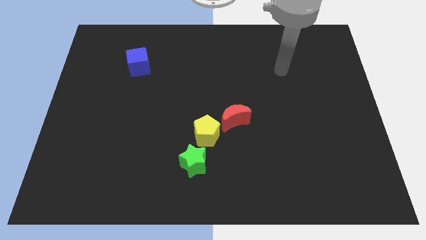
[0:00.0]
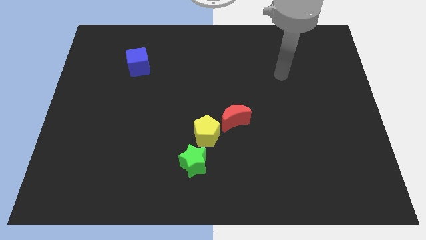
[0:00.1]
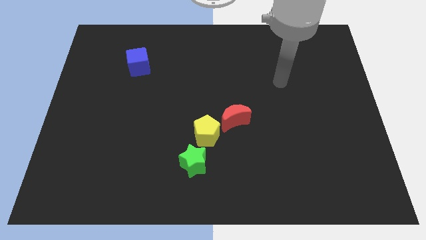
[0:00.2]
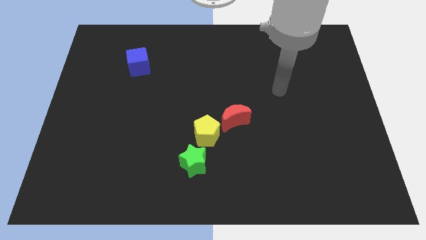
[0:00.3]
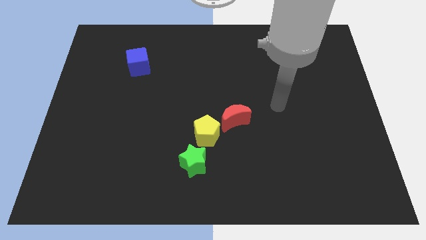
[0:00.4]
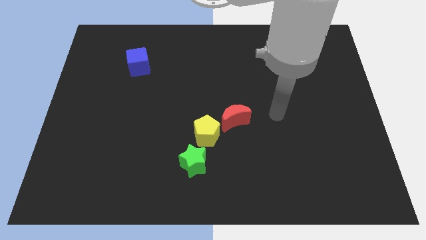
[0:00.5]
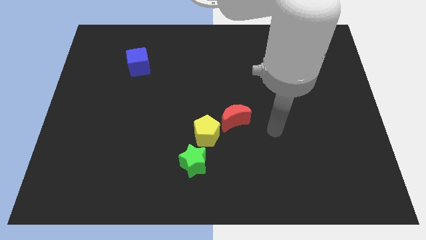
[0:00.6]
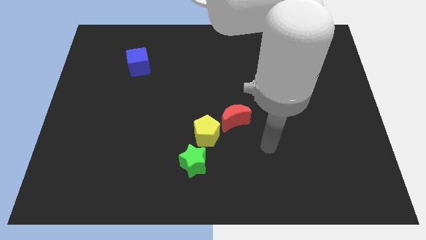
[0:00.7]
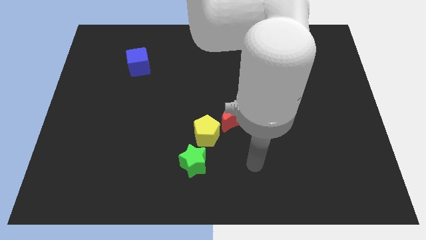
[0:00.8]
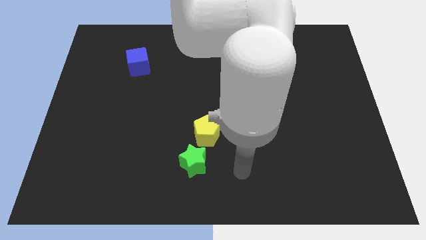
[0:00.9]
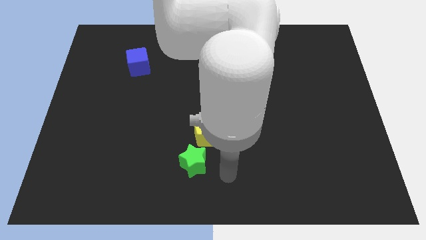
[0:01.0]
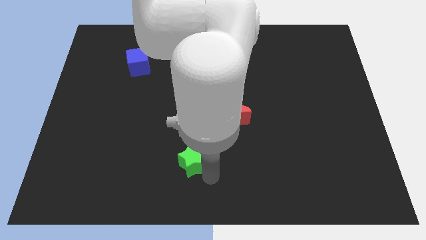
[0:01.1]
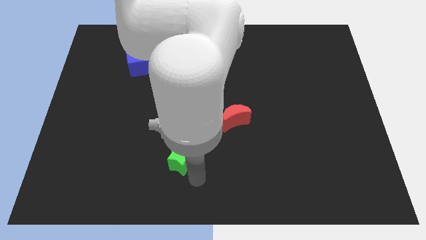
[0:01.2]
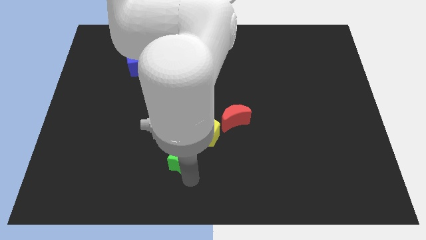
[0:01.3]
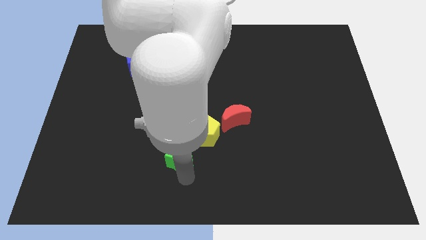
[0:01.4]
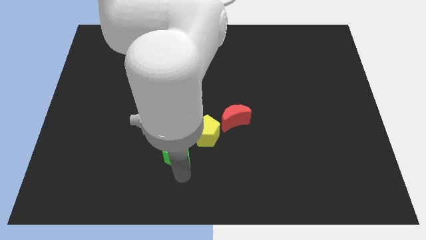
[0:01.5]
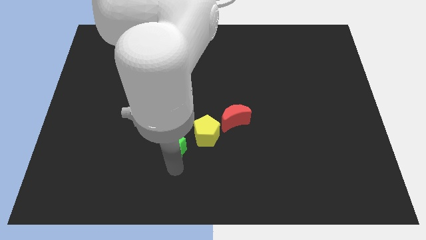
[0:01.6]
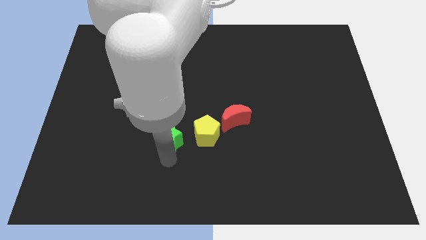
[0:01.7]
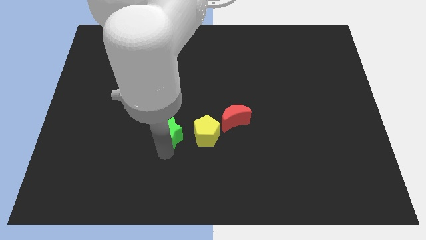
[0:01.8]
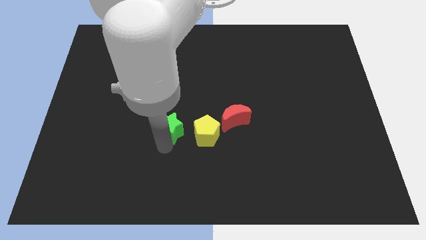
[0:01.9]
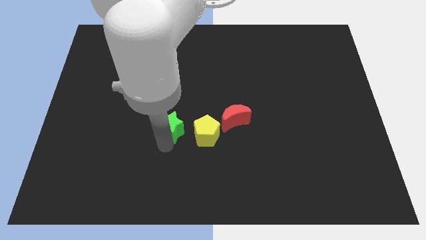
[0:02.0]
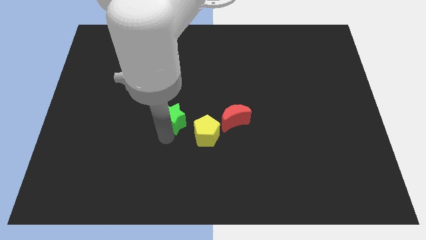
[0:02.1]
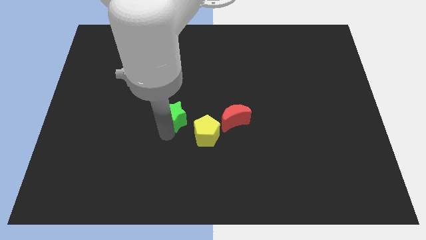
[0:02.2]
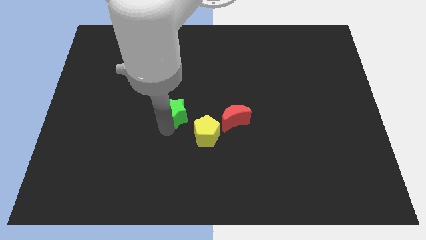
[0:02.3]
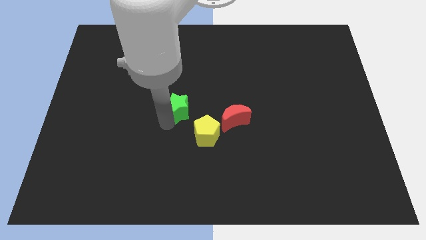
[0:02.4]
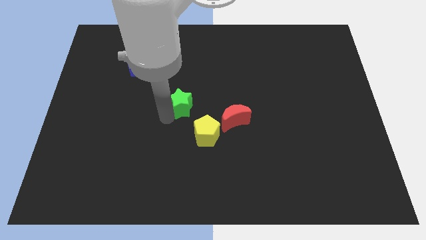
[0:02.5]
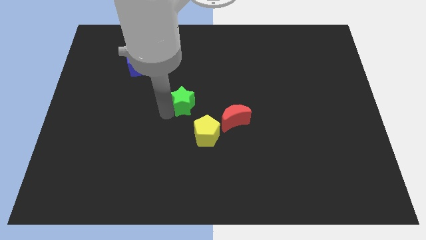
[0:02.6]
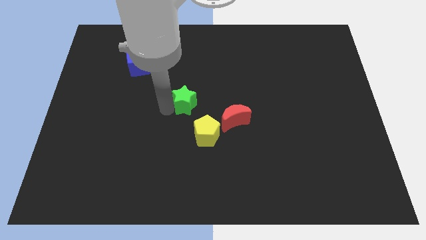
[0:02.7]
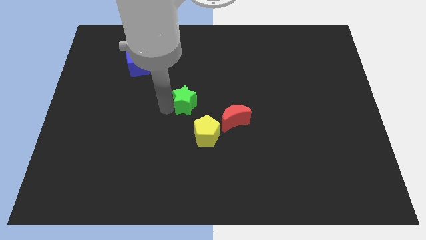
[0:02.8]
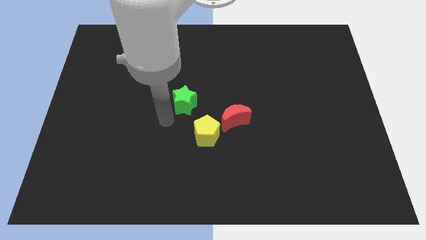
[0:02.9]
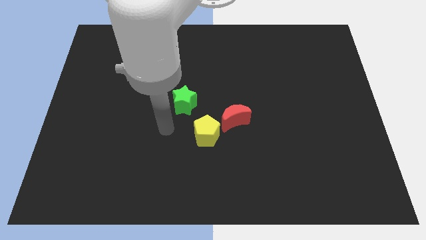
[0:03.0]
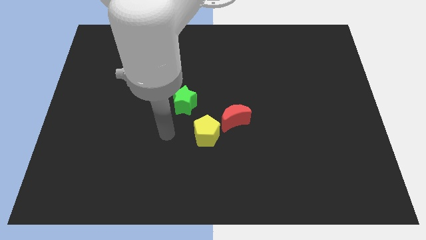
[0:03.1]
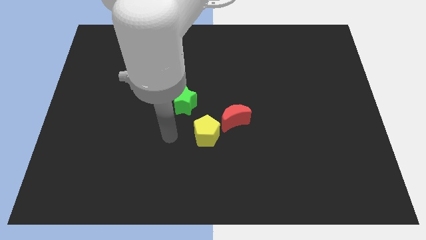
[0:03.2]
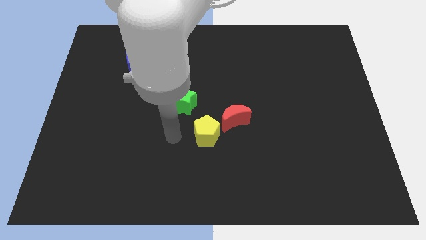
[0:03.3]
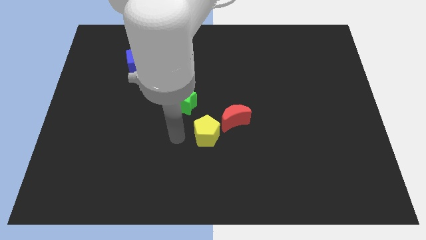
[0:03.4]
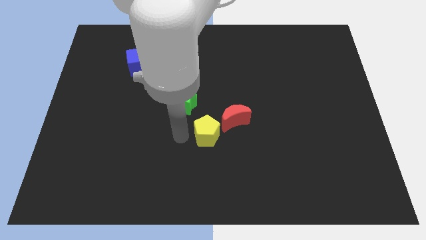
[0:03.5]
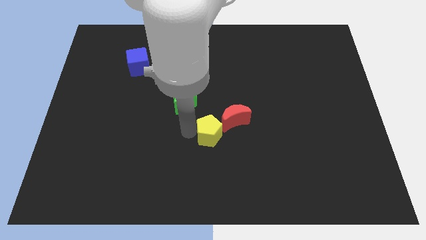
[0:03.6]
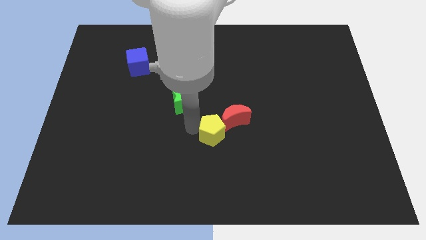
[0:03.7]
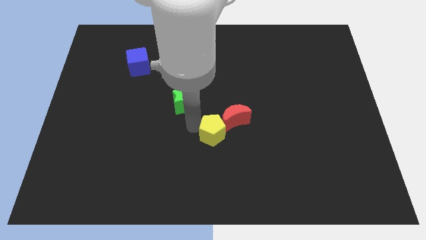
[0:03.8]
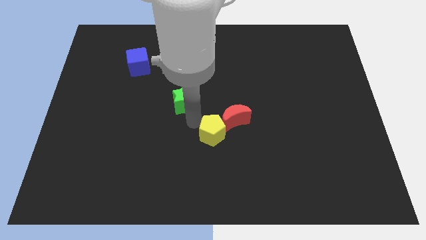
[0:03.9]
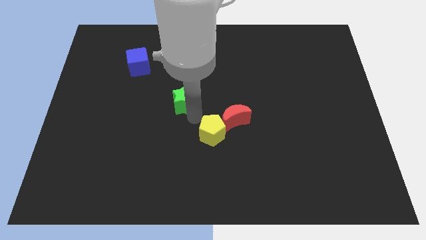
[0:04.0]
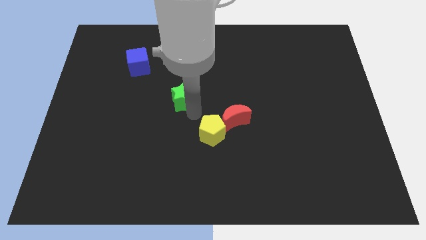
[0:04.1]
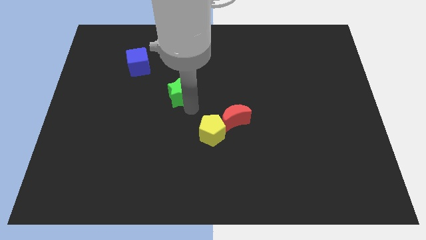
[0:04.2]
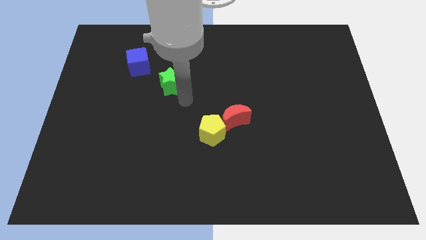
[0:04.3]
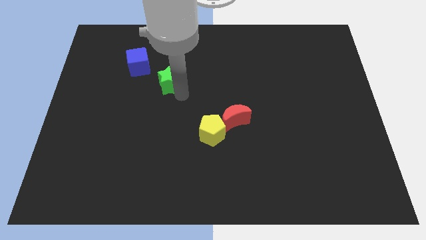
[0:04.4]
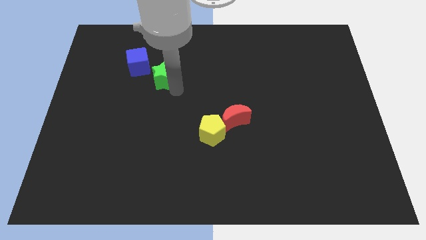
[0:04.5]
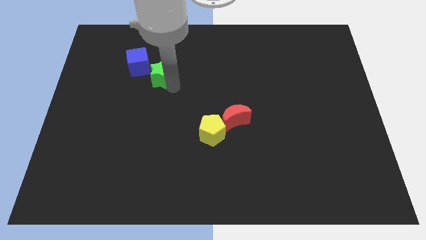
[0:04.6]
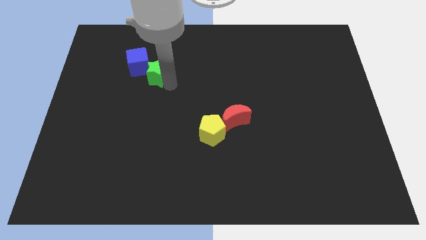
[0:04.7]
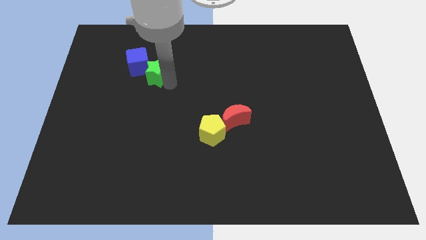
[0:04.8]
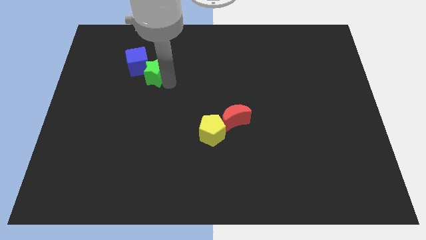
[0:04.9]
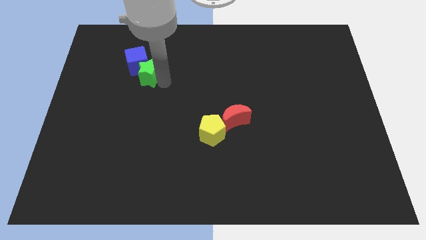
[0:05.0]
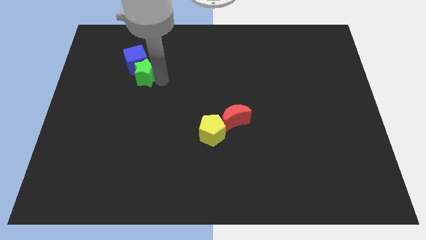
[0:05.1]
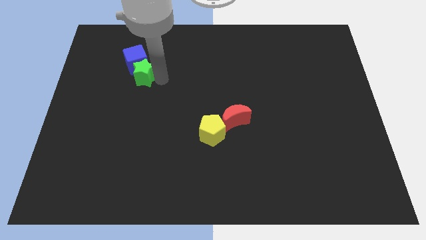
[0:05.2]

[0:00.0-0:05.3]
move the green star to the blue block

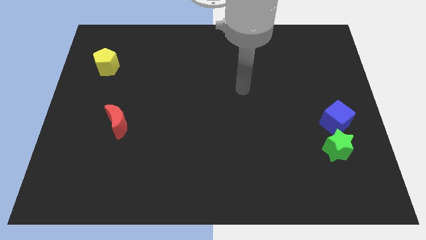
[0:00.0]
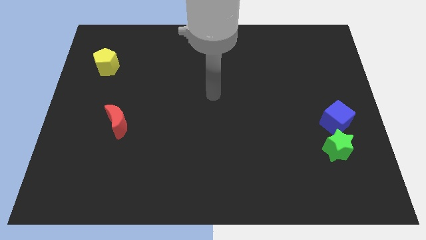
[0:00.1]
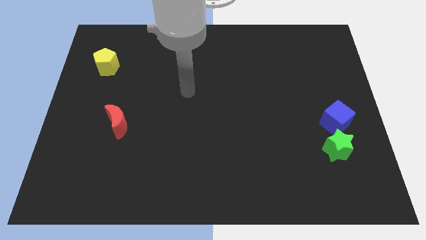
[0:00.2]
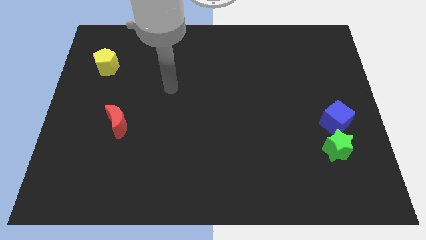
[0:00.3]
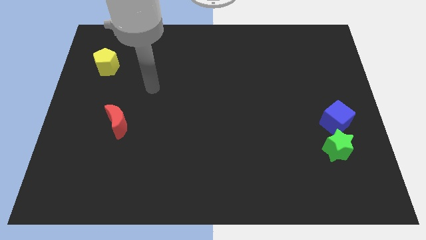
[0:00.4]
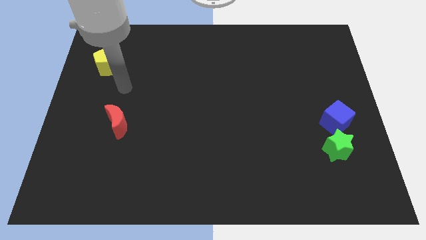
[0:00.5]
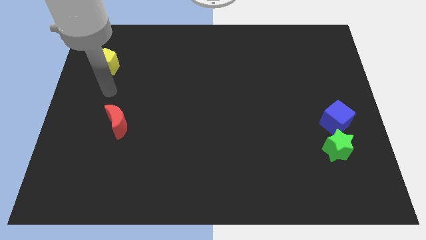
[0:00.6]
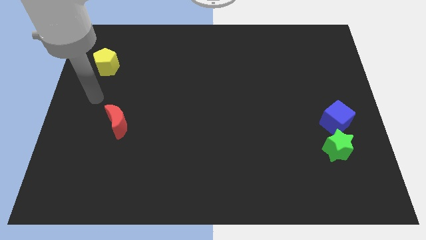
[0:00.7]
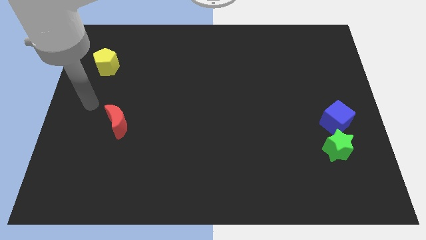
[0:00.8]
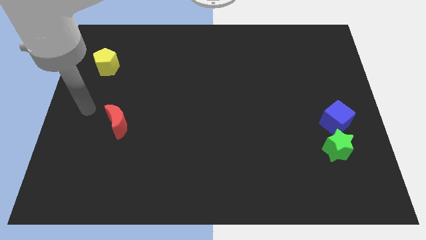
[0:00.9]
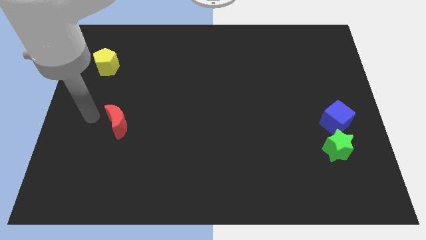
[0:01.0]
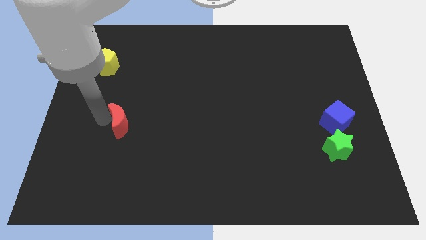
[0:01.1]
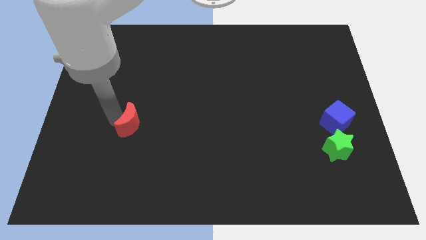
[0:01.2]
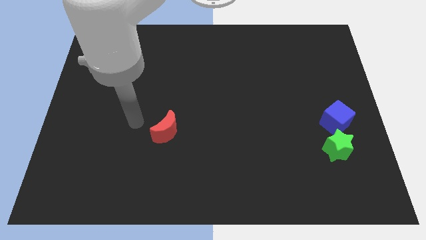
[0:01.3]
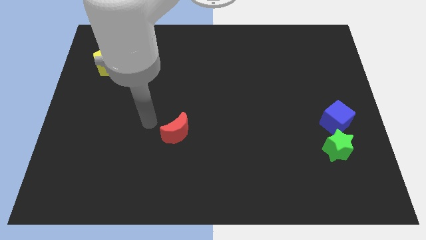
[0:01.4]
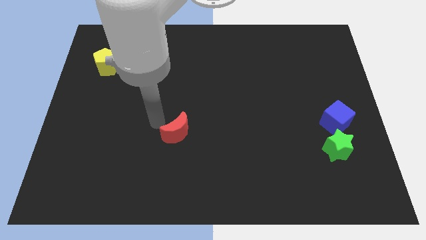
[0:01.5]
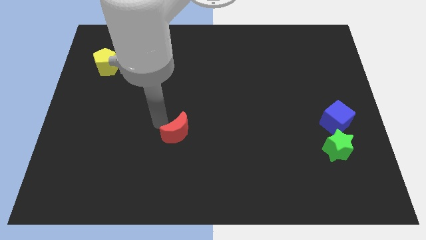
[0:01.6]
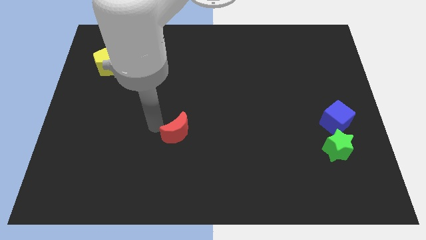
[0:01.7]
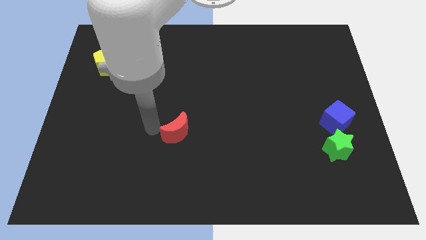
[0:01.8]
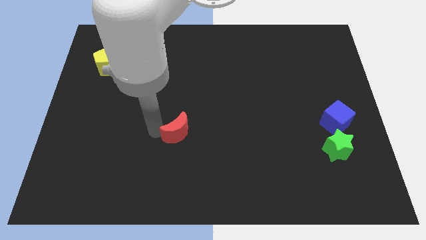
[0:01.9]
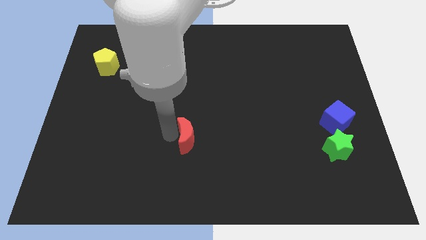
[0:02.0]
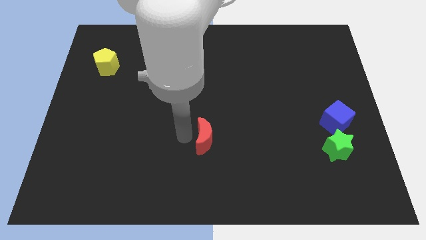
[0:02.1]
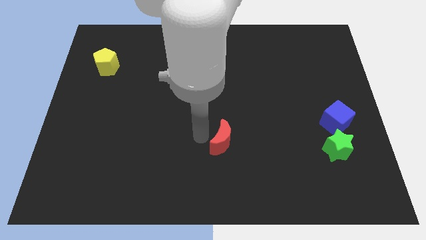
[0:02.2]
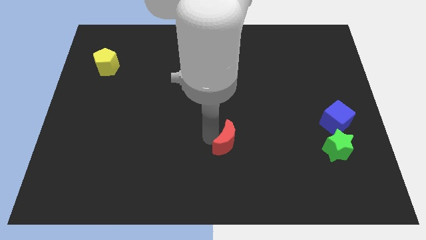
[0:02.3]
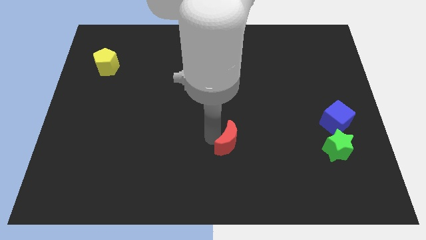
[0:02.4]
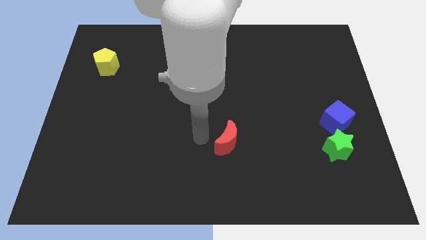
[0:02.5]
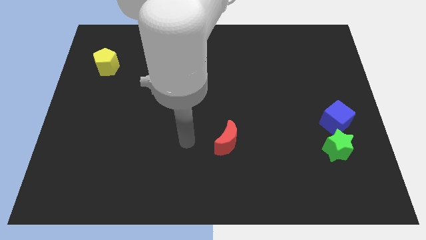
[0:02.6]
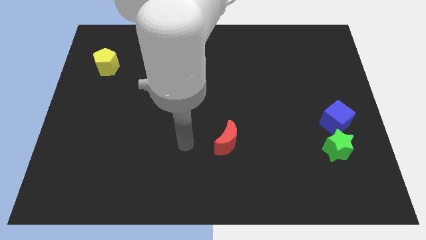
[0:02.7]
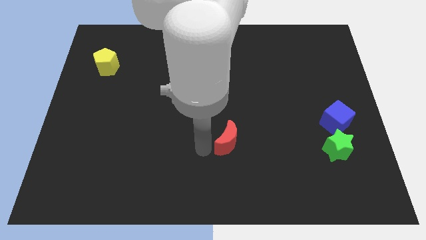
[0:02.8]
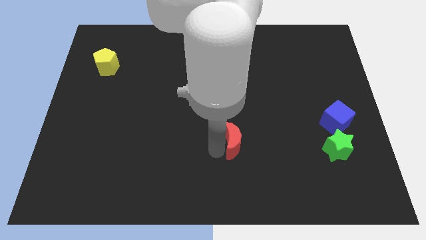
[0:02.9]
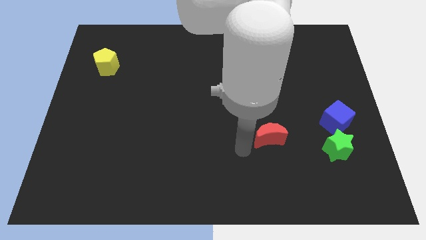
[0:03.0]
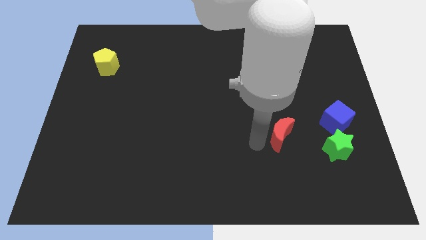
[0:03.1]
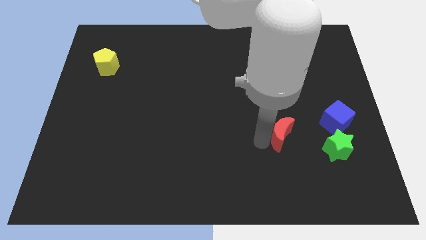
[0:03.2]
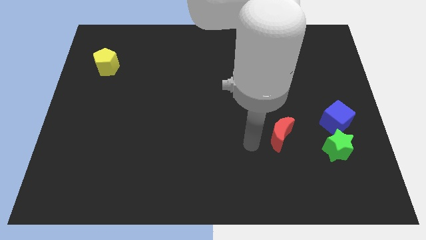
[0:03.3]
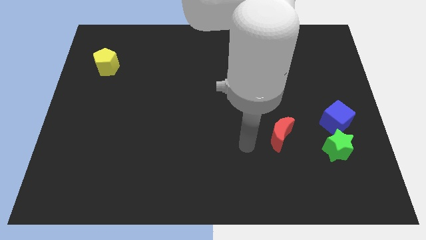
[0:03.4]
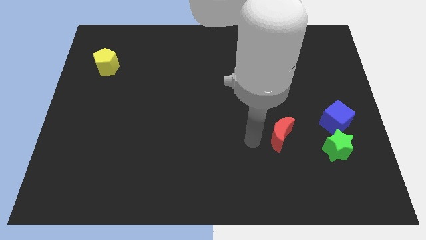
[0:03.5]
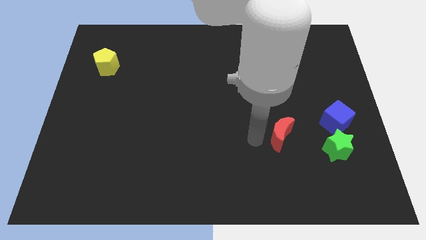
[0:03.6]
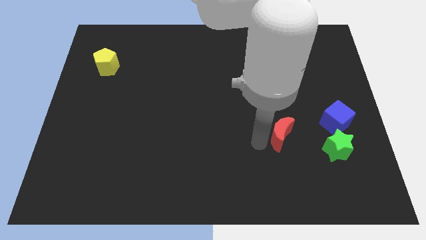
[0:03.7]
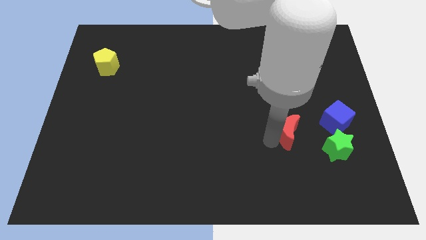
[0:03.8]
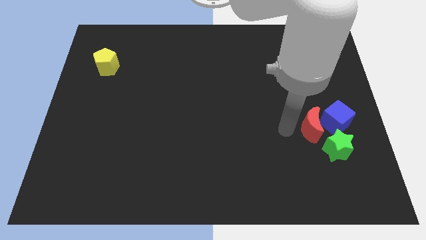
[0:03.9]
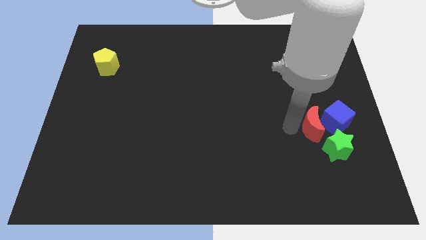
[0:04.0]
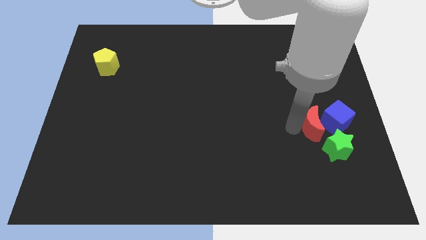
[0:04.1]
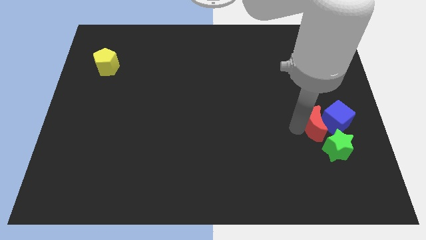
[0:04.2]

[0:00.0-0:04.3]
push the moon to the blue cube
